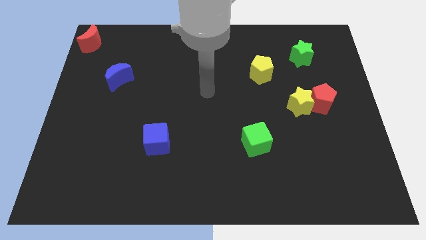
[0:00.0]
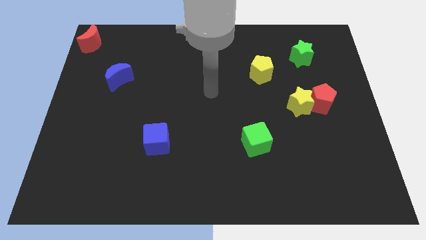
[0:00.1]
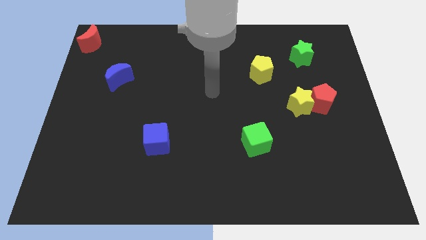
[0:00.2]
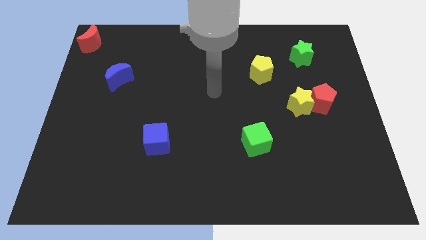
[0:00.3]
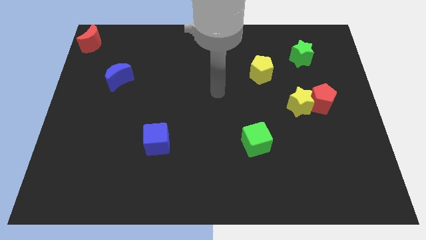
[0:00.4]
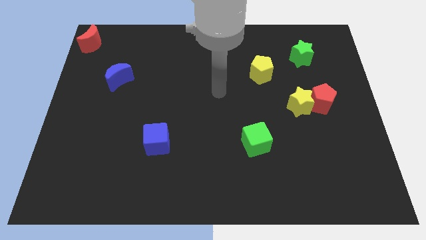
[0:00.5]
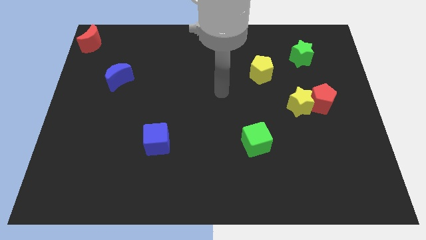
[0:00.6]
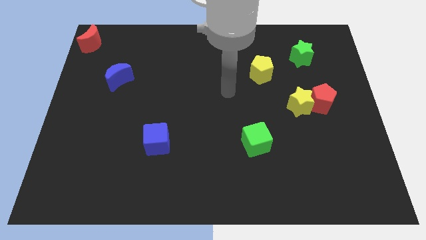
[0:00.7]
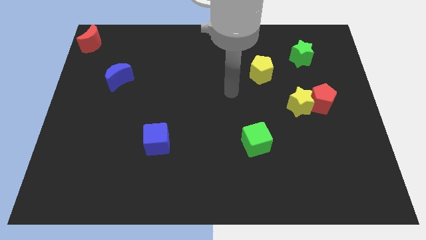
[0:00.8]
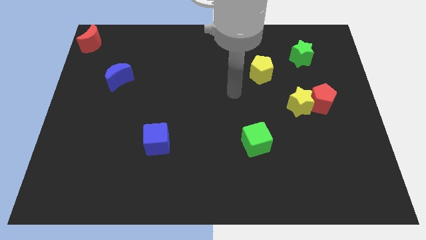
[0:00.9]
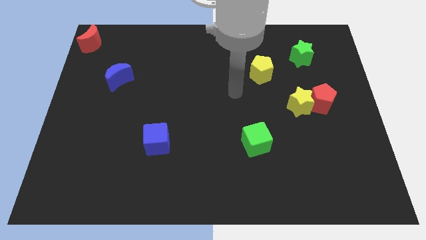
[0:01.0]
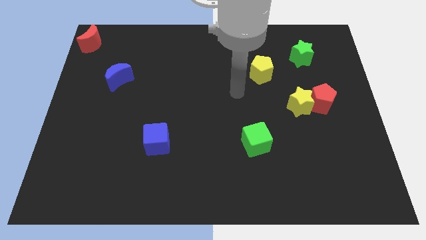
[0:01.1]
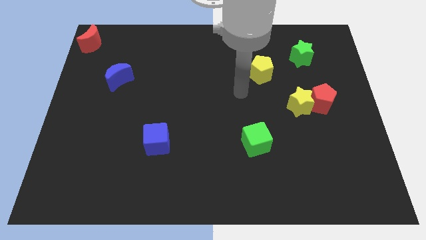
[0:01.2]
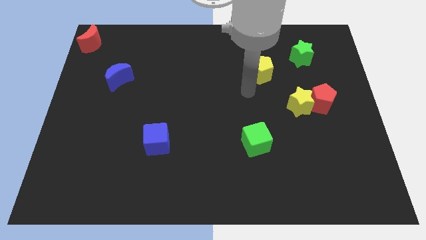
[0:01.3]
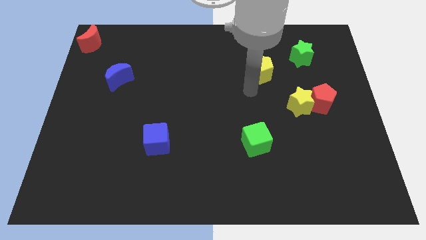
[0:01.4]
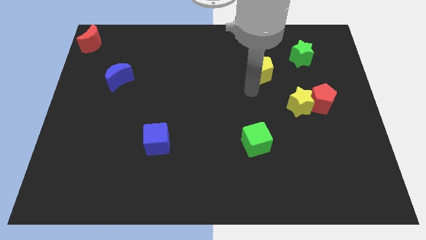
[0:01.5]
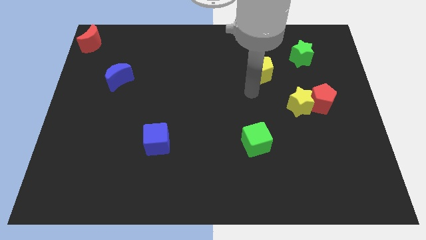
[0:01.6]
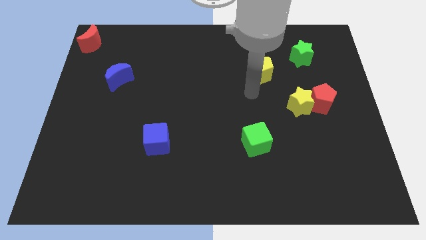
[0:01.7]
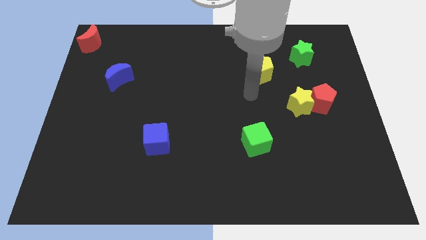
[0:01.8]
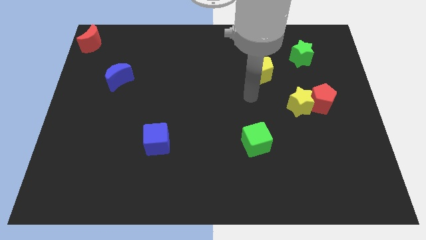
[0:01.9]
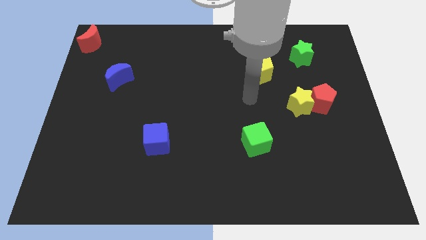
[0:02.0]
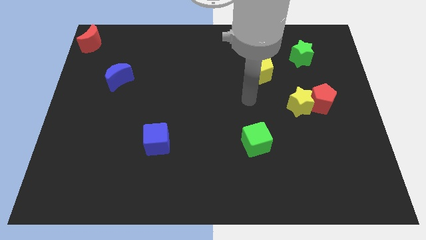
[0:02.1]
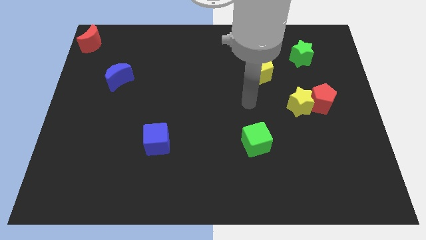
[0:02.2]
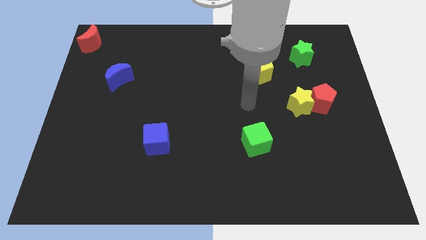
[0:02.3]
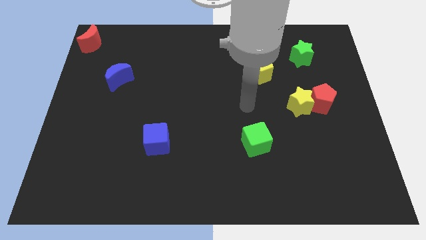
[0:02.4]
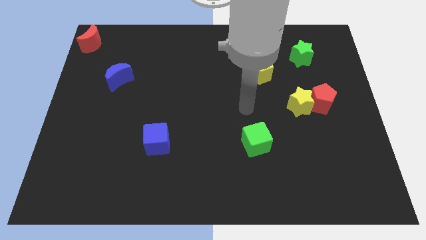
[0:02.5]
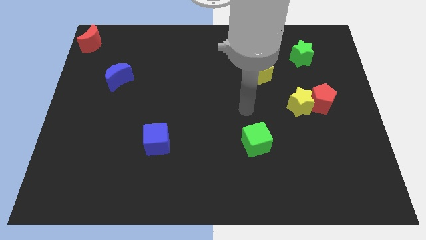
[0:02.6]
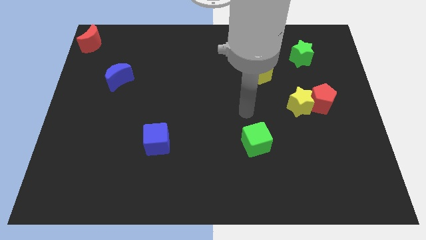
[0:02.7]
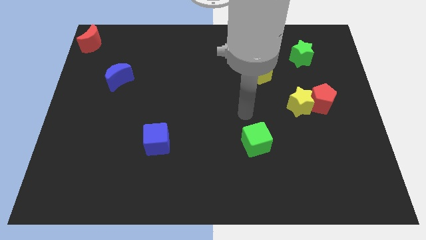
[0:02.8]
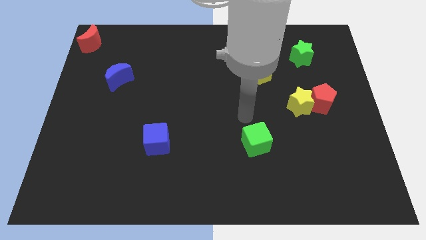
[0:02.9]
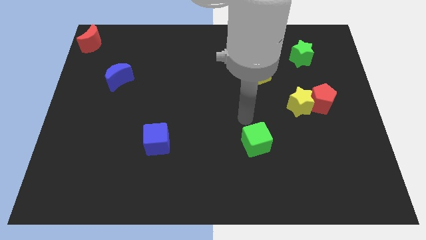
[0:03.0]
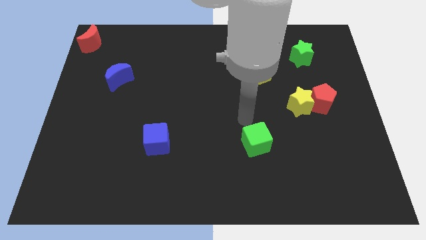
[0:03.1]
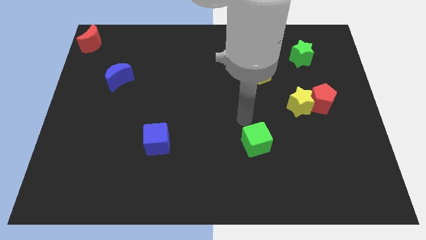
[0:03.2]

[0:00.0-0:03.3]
move your arm close to the green cube

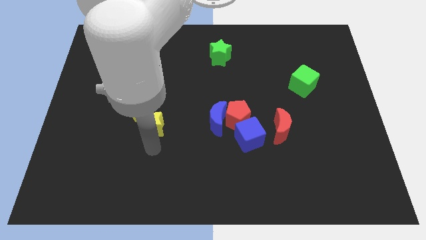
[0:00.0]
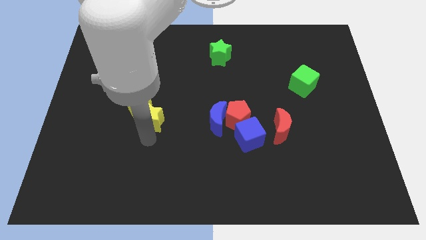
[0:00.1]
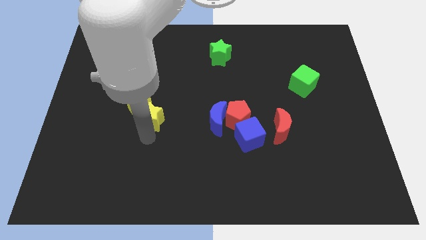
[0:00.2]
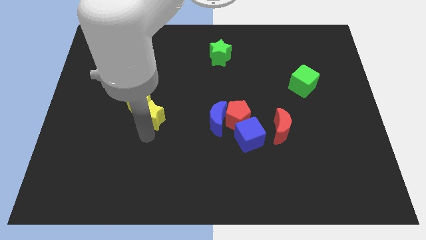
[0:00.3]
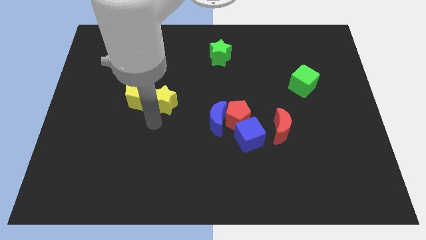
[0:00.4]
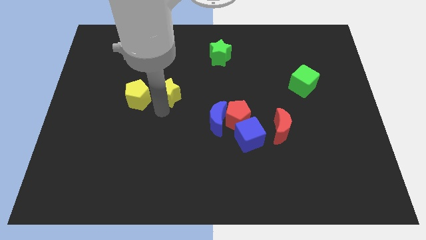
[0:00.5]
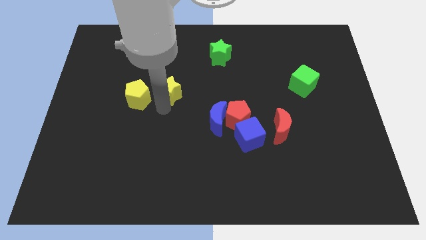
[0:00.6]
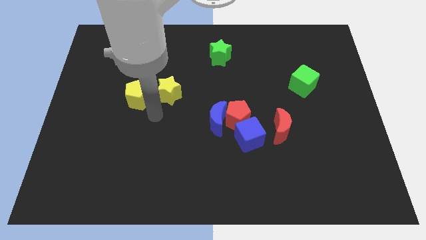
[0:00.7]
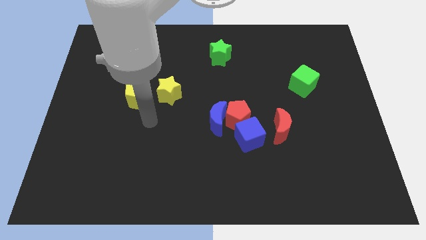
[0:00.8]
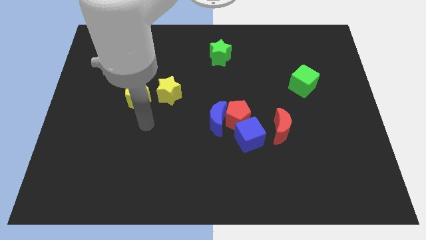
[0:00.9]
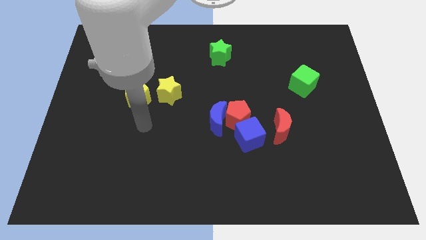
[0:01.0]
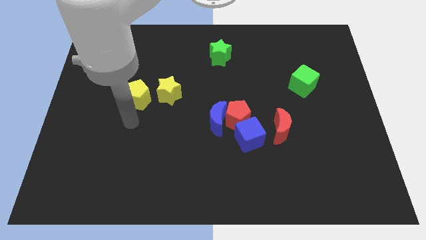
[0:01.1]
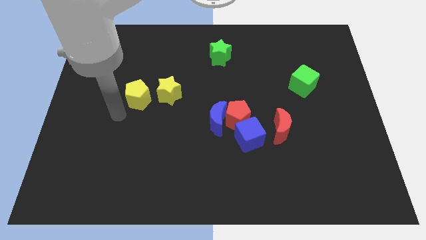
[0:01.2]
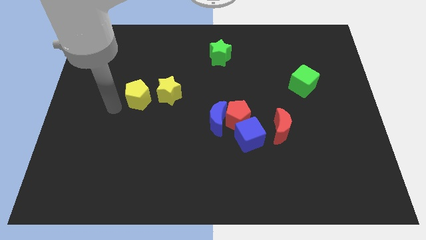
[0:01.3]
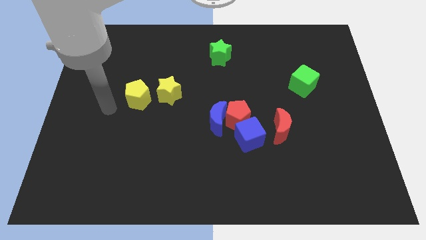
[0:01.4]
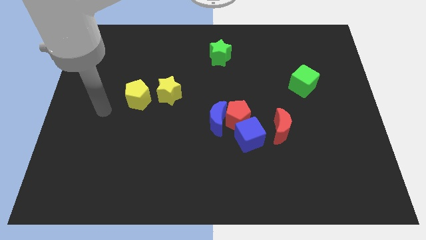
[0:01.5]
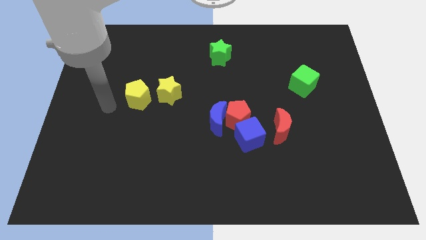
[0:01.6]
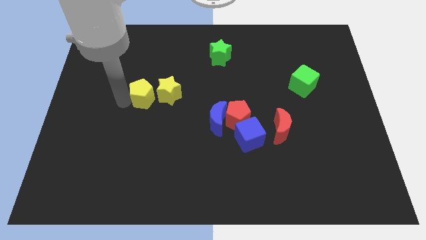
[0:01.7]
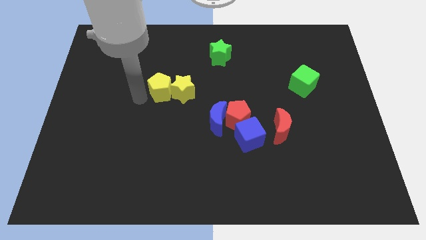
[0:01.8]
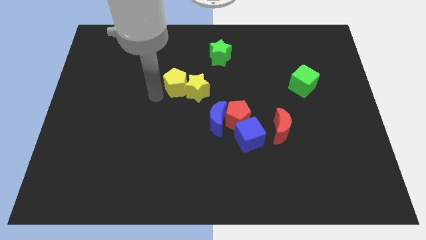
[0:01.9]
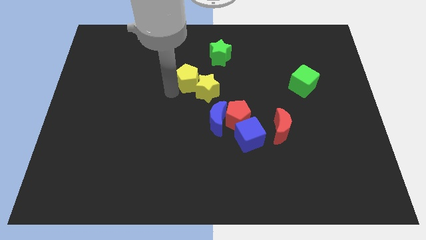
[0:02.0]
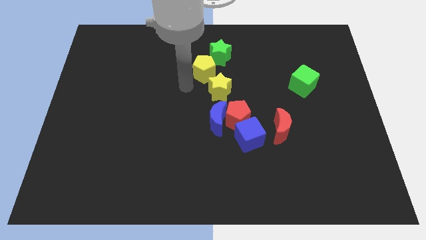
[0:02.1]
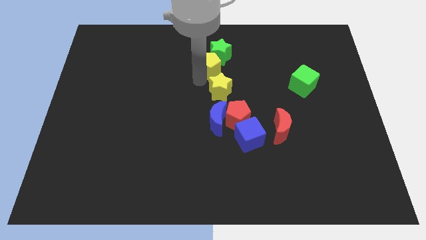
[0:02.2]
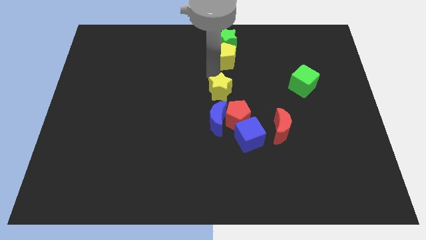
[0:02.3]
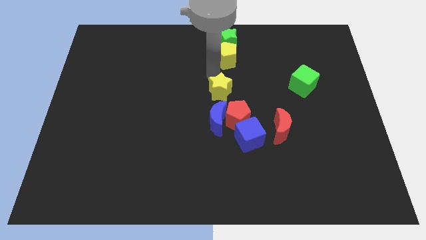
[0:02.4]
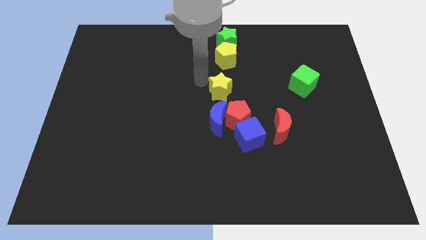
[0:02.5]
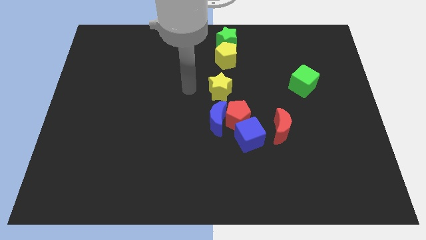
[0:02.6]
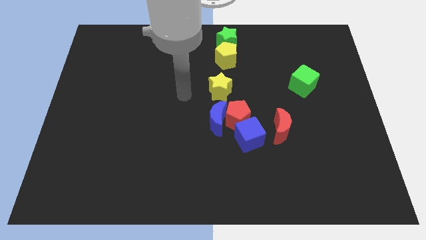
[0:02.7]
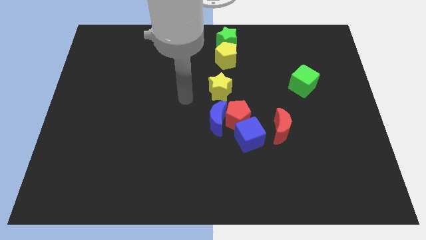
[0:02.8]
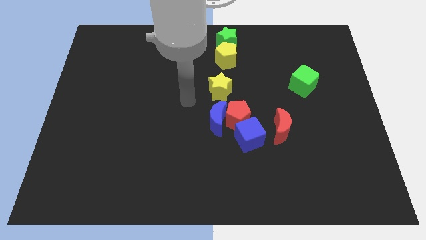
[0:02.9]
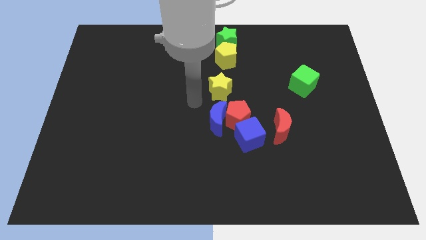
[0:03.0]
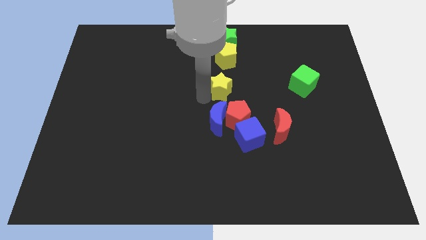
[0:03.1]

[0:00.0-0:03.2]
push yellow blocks below green star vertically

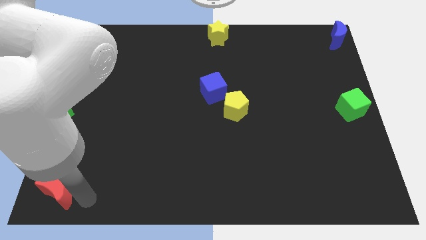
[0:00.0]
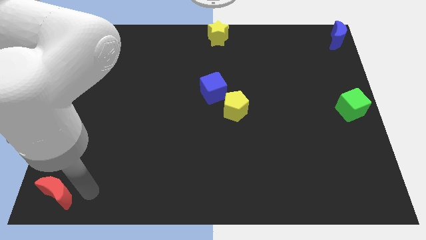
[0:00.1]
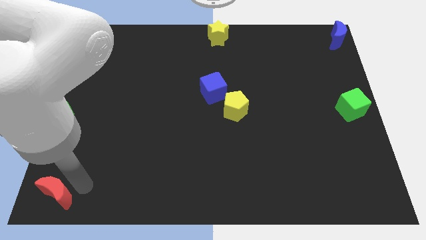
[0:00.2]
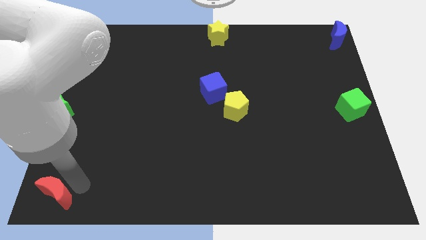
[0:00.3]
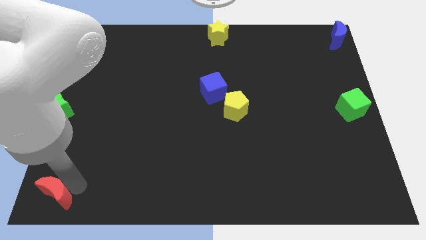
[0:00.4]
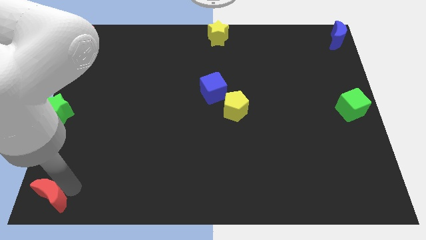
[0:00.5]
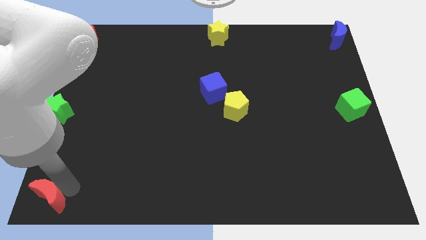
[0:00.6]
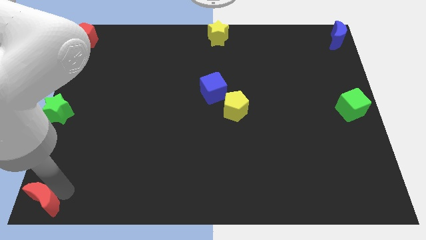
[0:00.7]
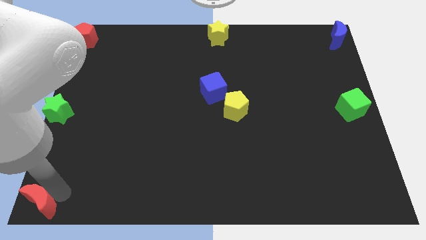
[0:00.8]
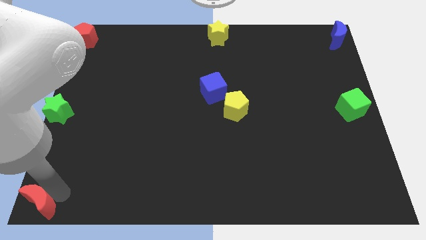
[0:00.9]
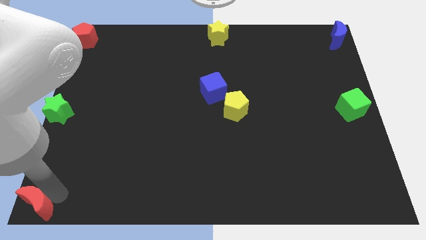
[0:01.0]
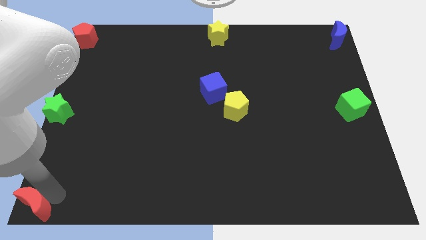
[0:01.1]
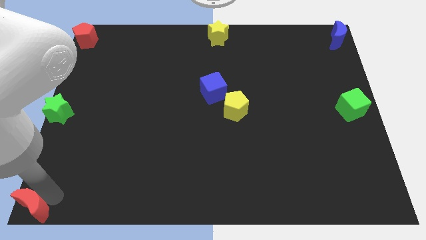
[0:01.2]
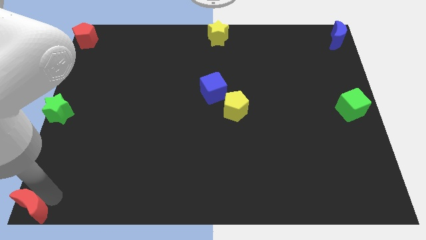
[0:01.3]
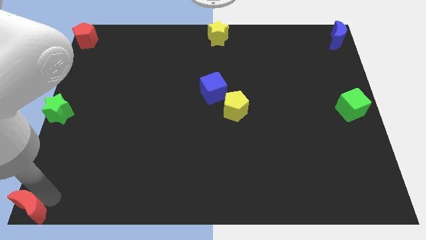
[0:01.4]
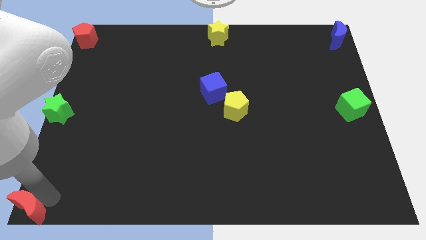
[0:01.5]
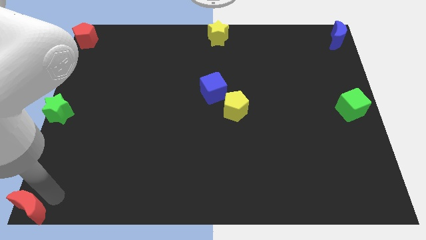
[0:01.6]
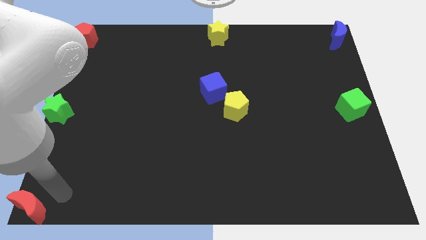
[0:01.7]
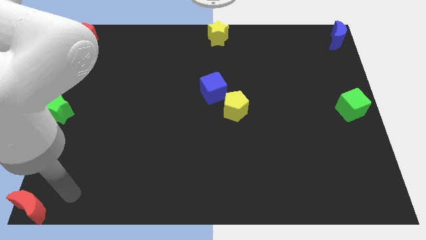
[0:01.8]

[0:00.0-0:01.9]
place the red crescent to the bottom left of the board

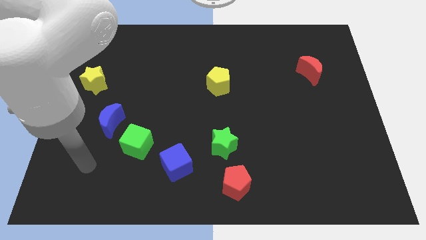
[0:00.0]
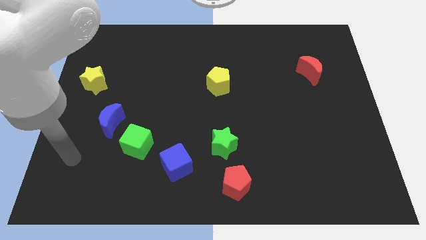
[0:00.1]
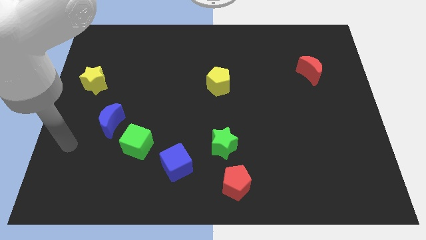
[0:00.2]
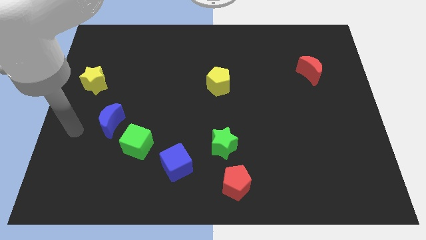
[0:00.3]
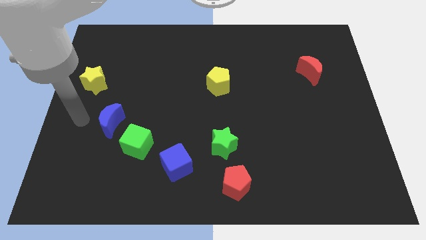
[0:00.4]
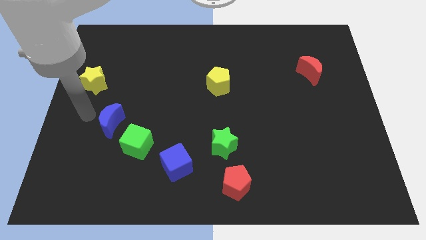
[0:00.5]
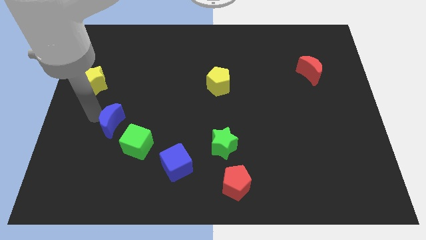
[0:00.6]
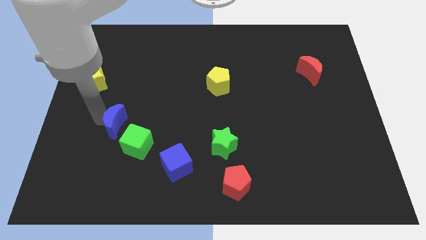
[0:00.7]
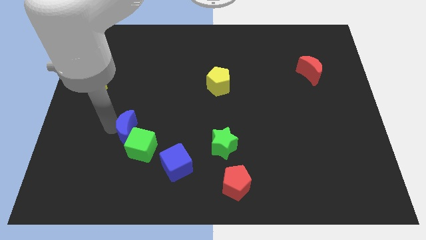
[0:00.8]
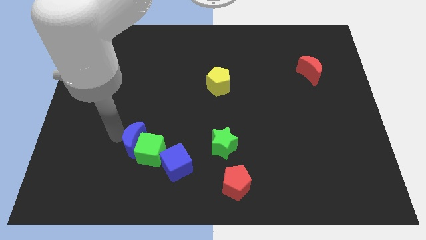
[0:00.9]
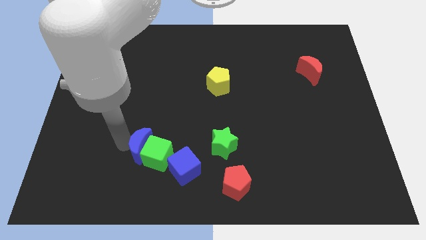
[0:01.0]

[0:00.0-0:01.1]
push the blue crescent and green cube into the blue cube
